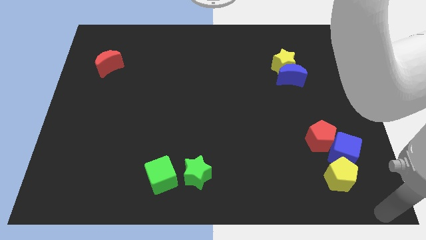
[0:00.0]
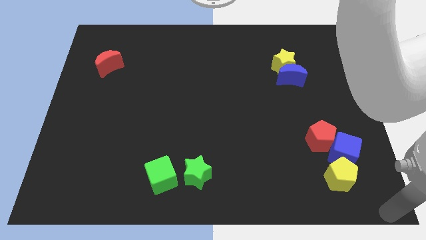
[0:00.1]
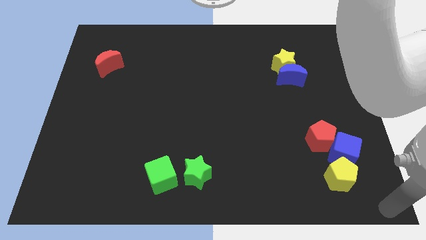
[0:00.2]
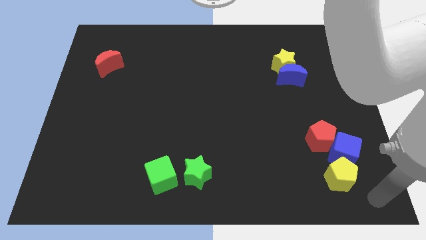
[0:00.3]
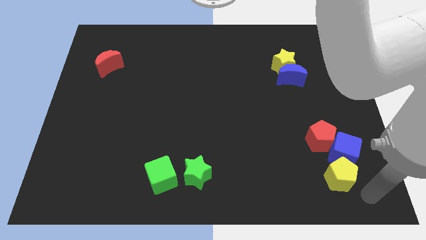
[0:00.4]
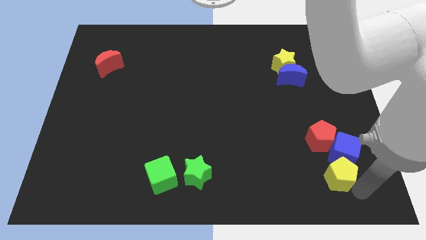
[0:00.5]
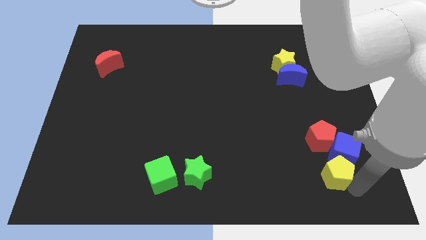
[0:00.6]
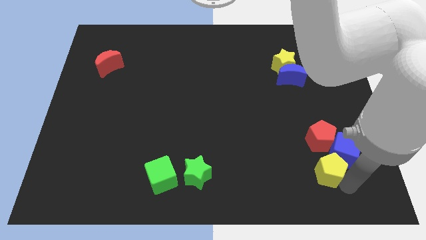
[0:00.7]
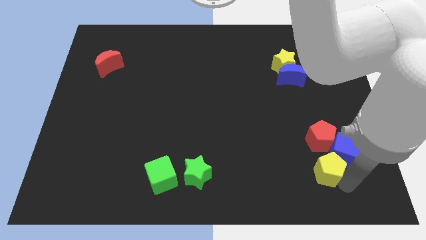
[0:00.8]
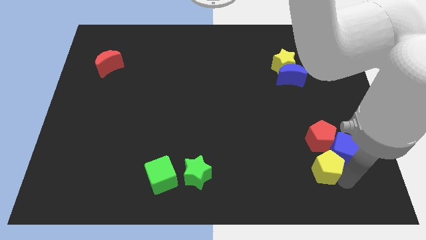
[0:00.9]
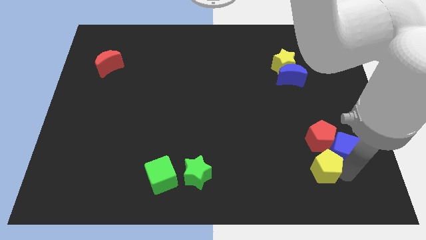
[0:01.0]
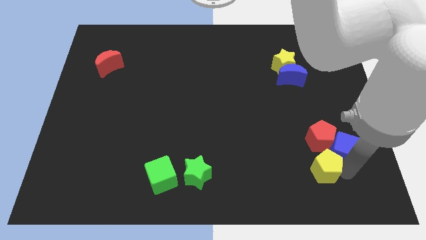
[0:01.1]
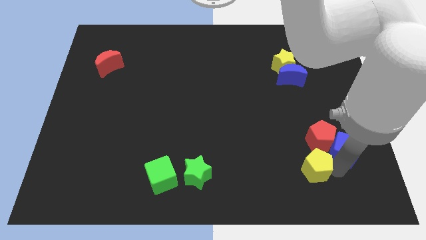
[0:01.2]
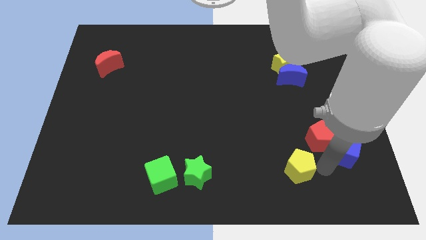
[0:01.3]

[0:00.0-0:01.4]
separate the yellow pentagon from the blue cube

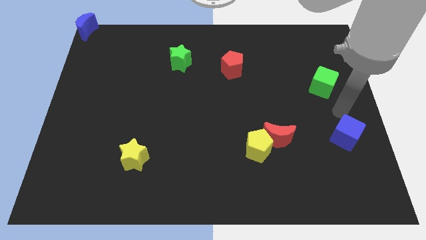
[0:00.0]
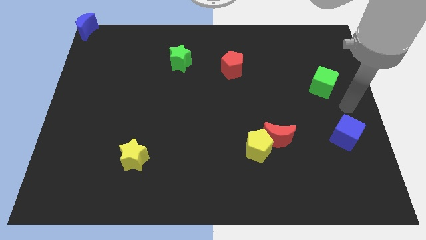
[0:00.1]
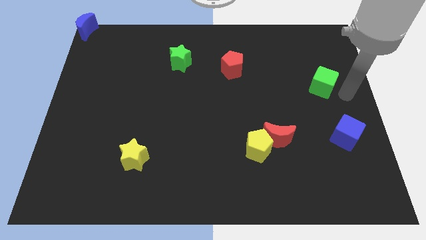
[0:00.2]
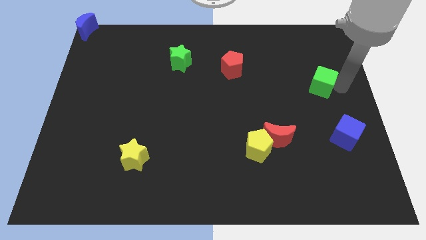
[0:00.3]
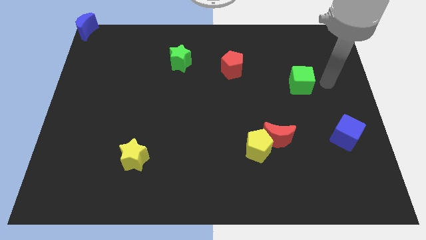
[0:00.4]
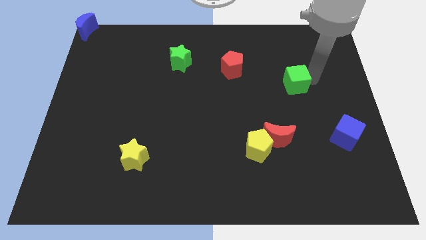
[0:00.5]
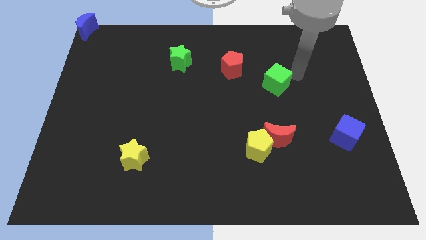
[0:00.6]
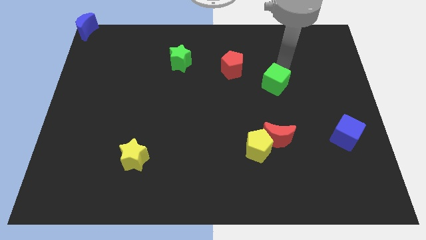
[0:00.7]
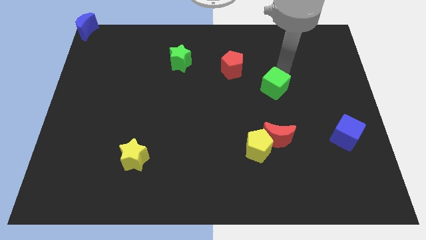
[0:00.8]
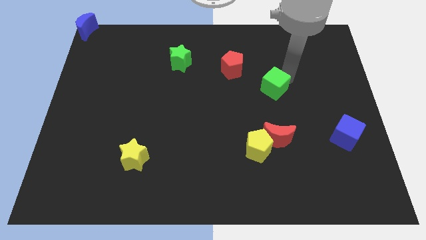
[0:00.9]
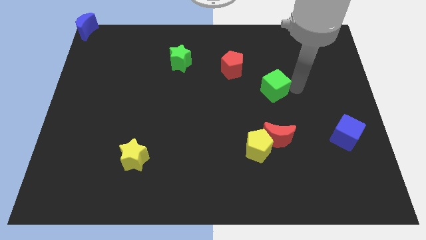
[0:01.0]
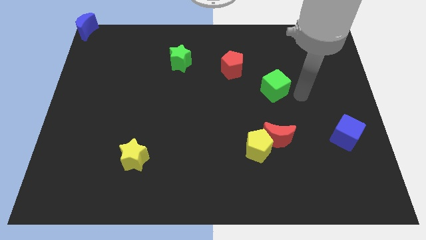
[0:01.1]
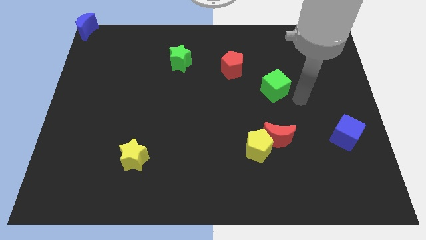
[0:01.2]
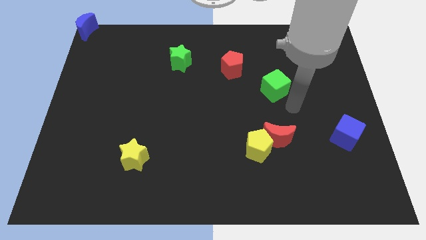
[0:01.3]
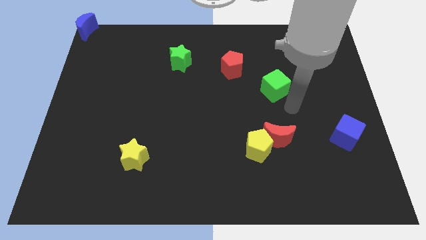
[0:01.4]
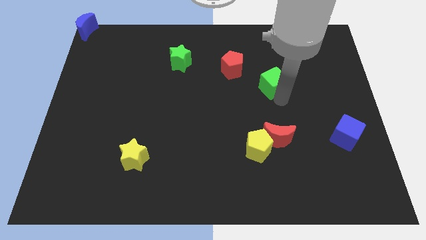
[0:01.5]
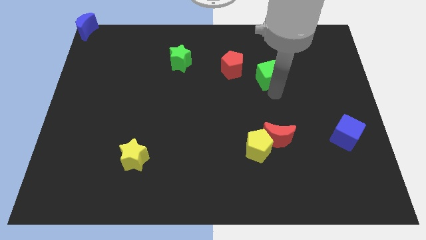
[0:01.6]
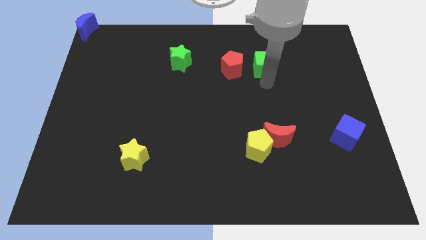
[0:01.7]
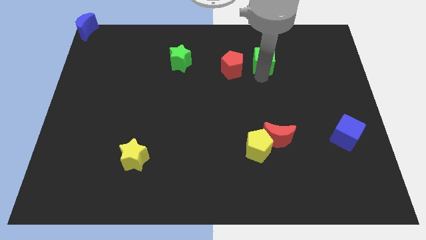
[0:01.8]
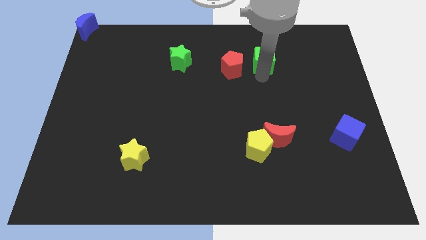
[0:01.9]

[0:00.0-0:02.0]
move the green cube right to the red pentagon

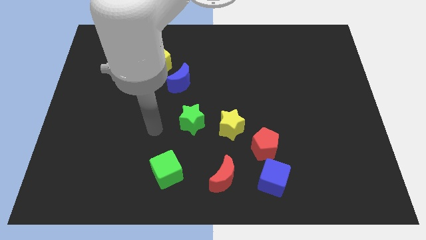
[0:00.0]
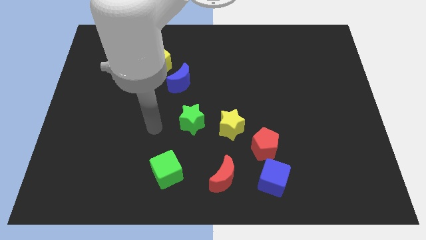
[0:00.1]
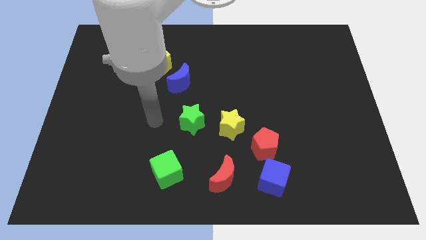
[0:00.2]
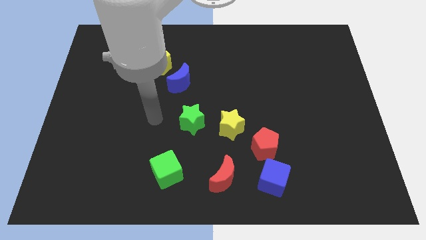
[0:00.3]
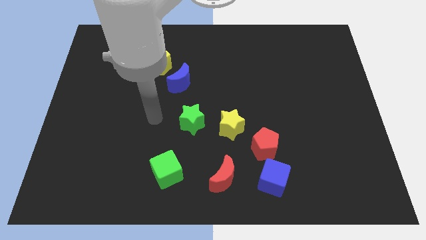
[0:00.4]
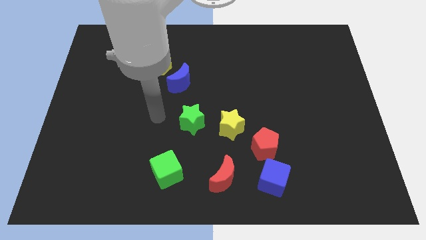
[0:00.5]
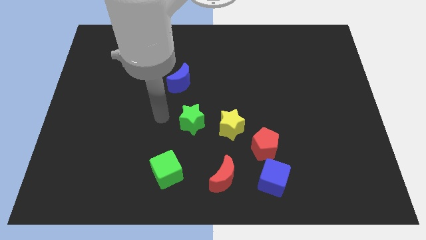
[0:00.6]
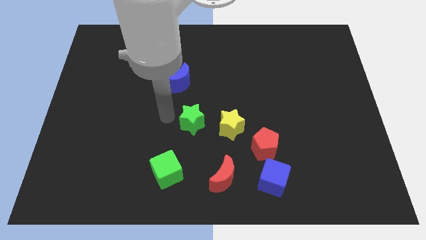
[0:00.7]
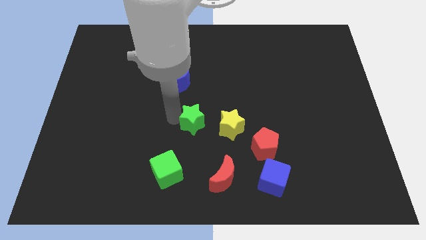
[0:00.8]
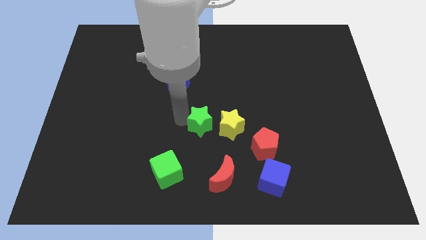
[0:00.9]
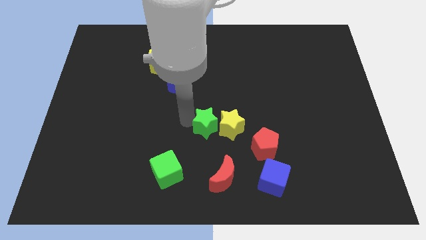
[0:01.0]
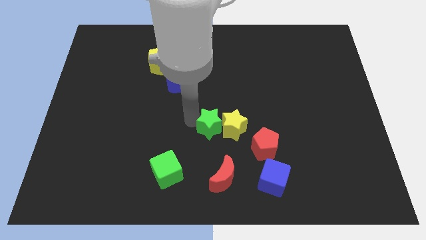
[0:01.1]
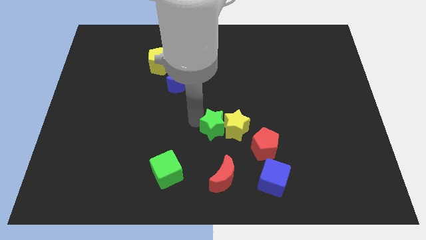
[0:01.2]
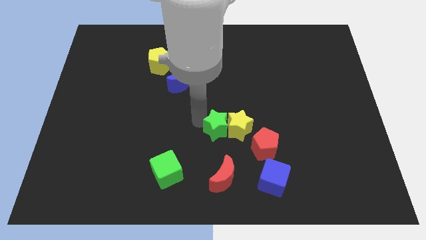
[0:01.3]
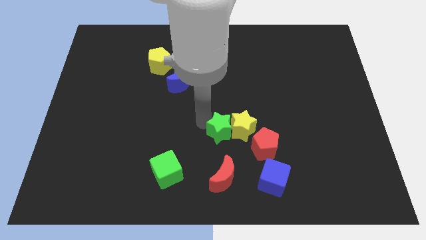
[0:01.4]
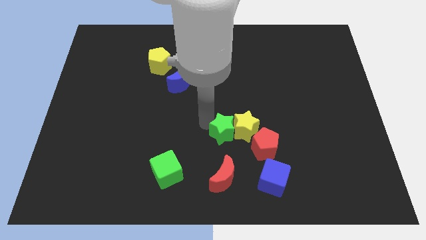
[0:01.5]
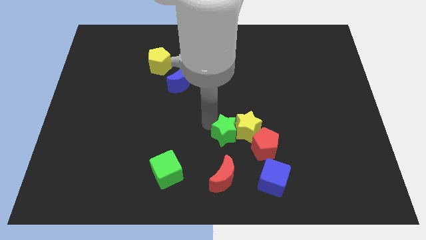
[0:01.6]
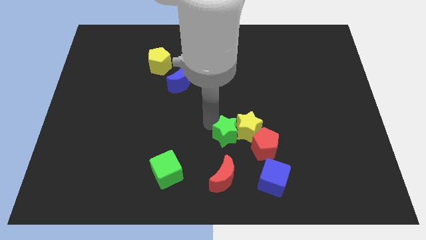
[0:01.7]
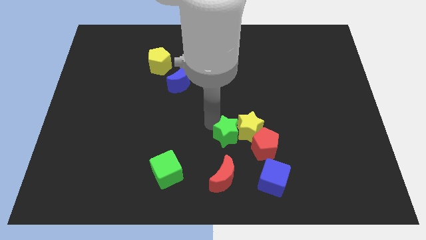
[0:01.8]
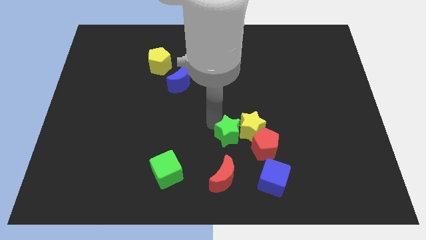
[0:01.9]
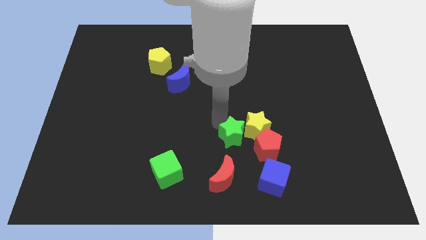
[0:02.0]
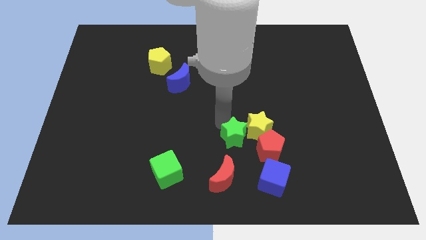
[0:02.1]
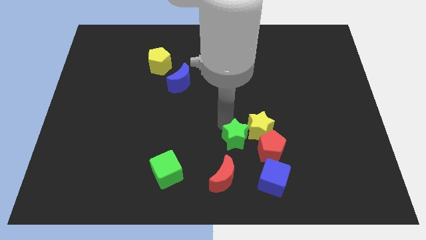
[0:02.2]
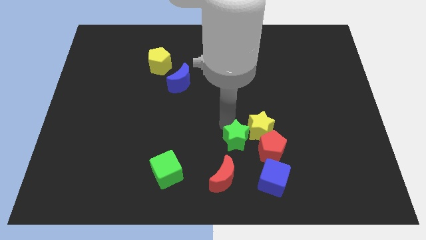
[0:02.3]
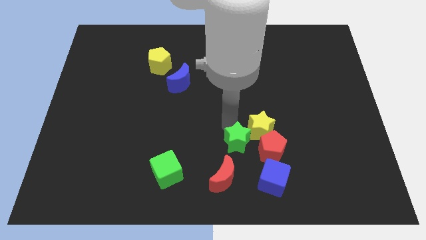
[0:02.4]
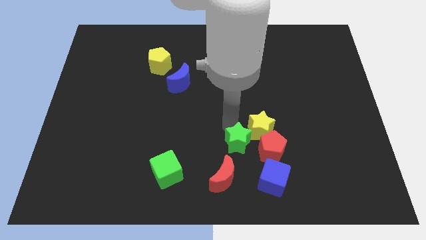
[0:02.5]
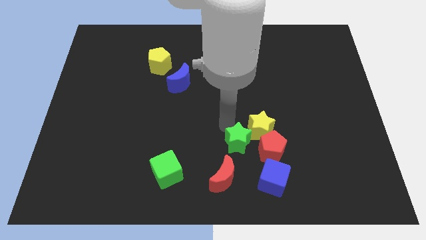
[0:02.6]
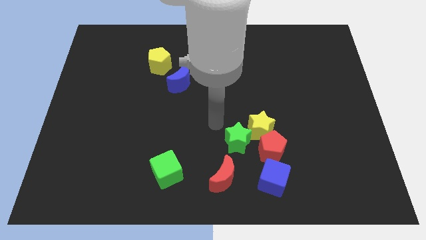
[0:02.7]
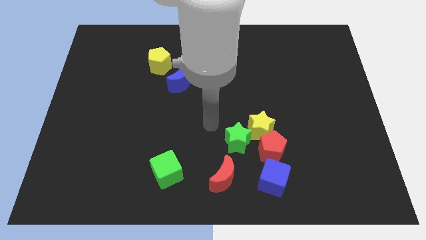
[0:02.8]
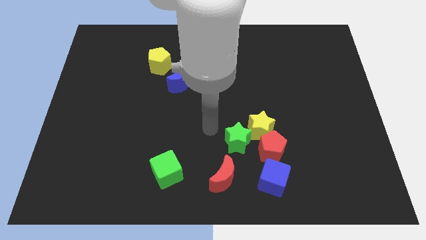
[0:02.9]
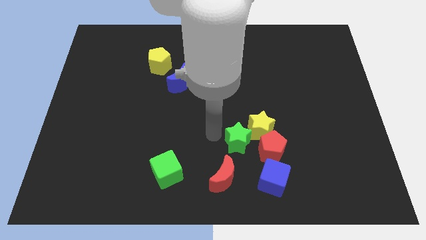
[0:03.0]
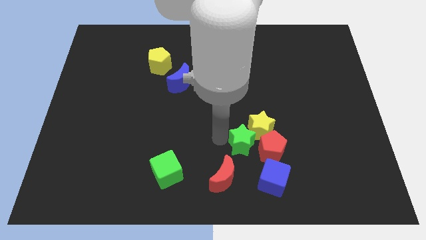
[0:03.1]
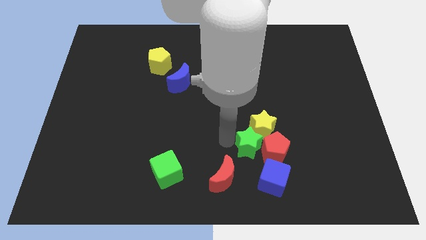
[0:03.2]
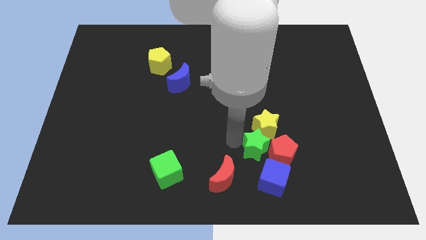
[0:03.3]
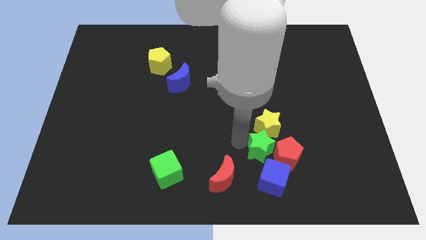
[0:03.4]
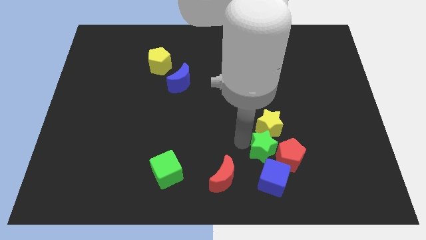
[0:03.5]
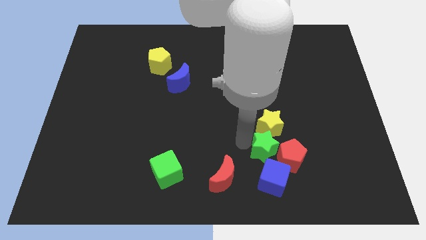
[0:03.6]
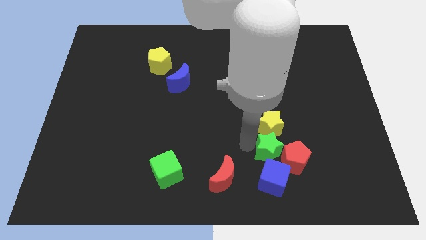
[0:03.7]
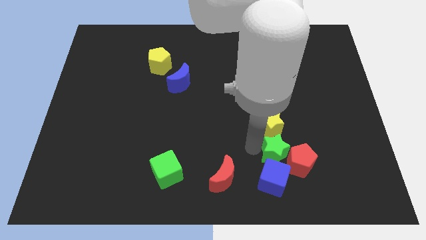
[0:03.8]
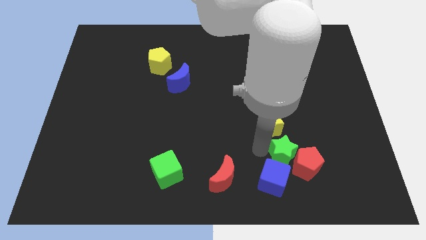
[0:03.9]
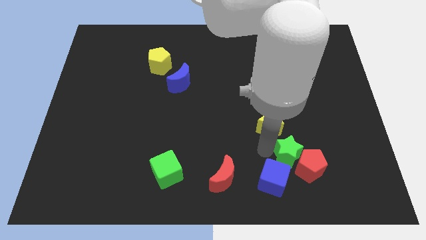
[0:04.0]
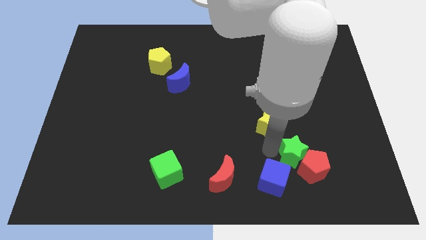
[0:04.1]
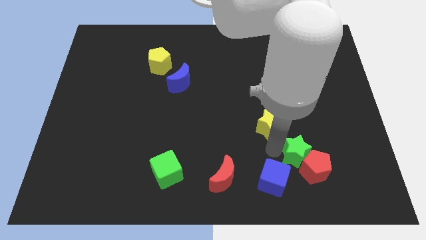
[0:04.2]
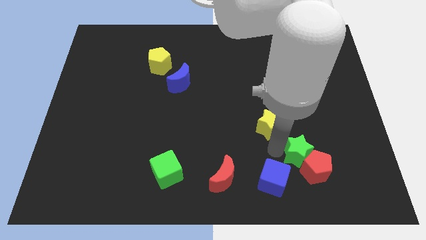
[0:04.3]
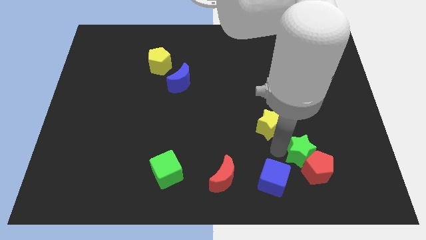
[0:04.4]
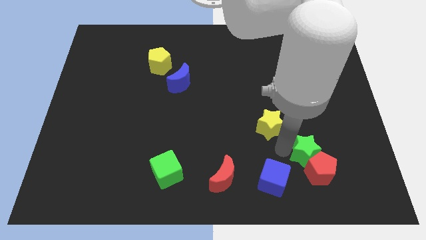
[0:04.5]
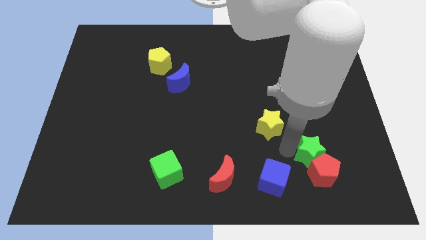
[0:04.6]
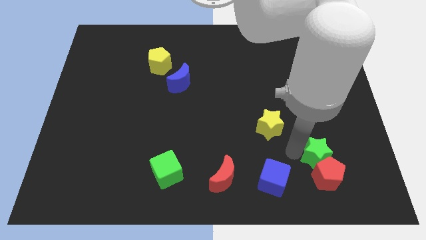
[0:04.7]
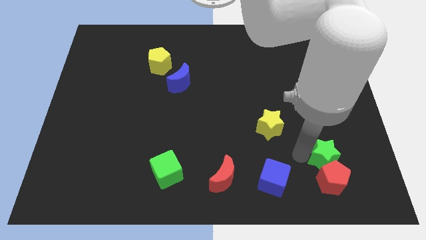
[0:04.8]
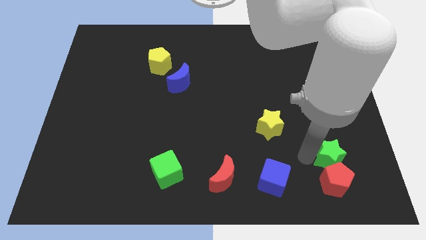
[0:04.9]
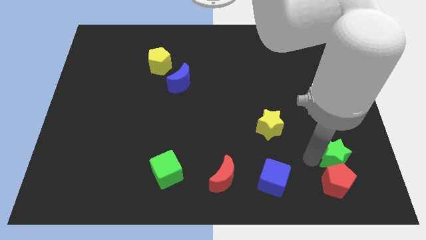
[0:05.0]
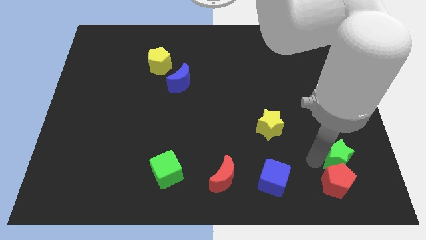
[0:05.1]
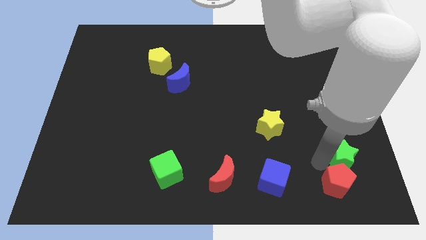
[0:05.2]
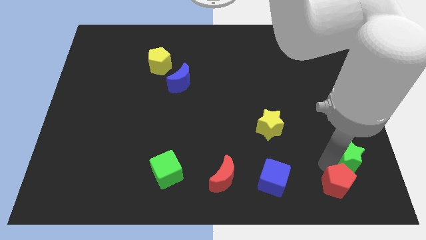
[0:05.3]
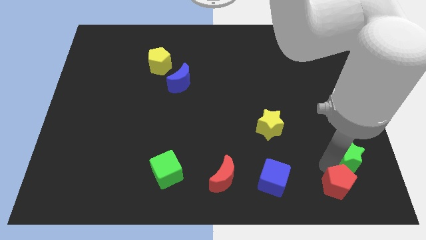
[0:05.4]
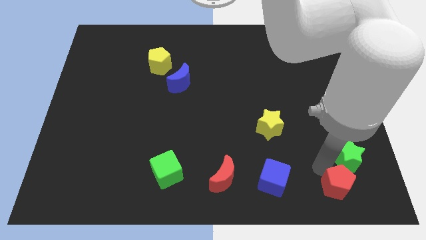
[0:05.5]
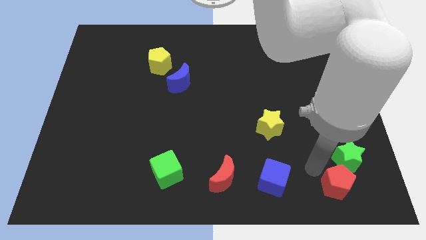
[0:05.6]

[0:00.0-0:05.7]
move the stars and red pentagon towards right of the board
